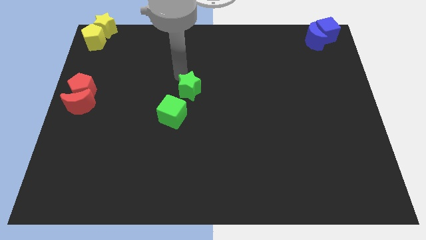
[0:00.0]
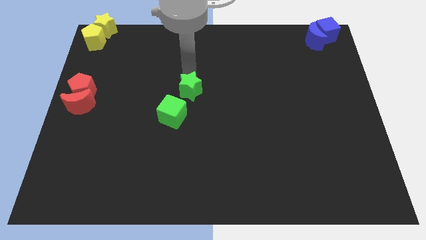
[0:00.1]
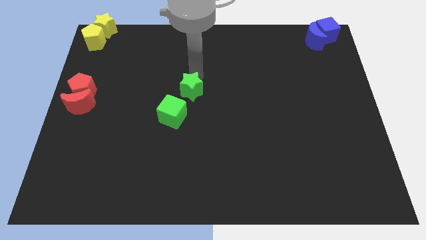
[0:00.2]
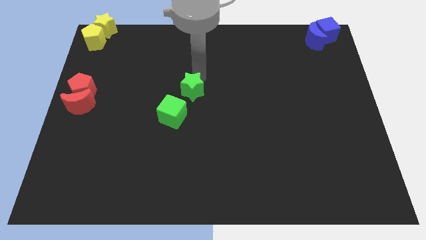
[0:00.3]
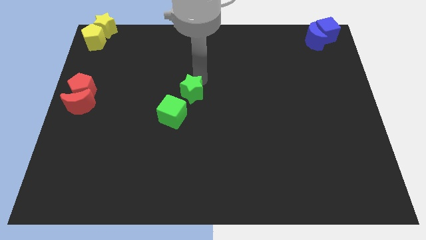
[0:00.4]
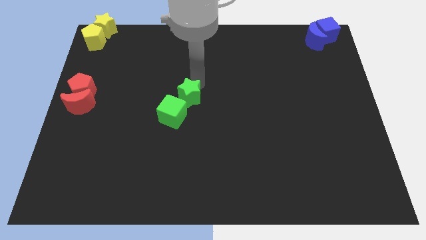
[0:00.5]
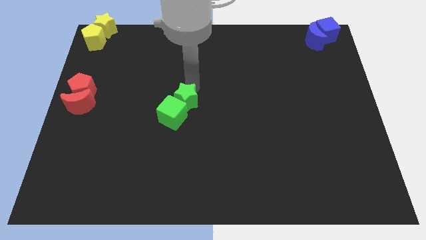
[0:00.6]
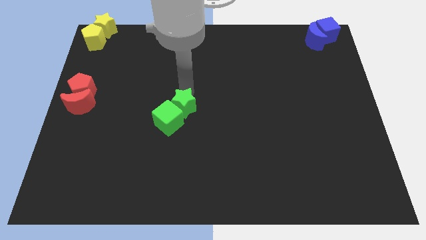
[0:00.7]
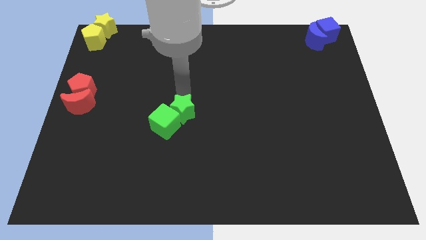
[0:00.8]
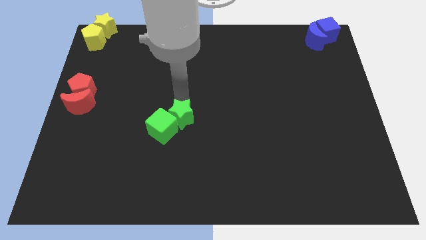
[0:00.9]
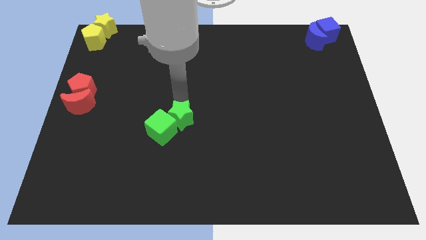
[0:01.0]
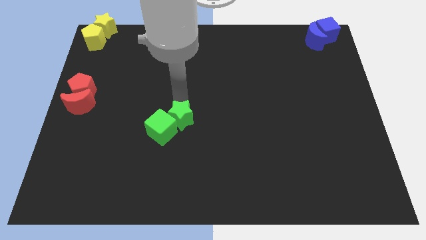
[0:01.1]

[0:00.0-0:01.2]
push the green star into the green cube

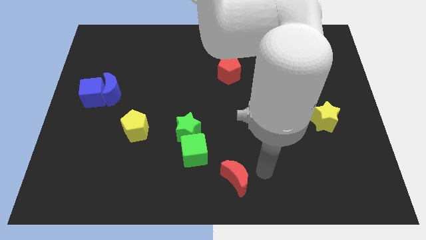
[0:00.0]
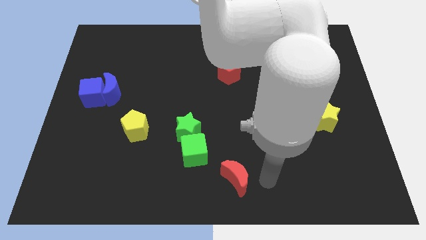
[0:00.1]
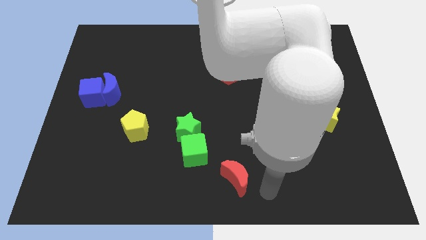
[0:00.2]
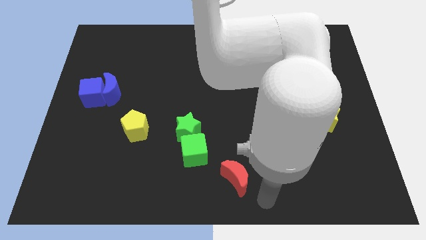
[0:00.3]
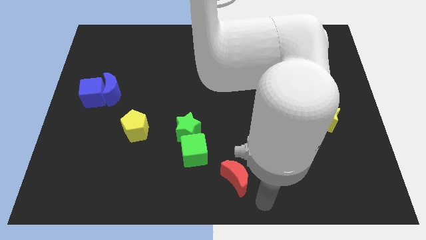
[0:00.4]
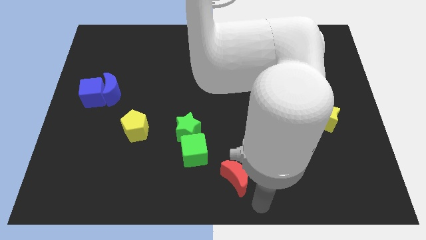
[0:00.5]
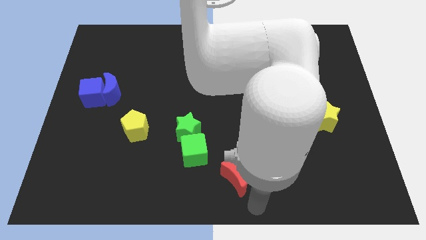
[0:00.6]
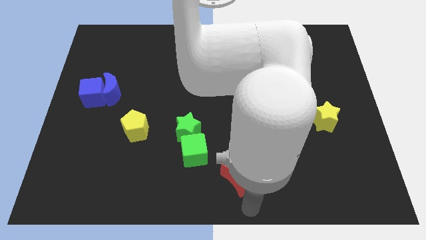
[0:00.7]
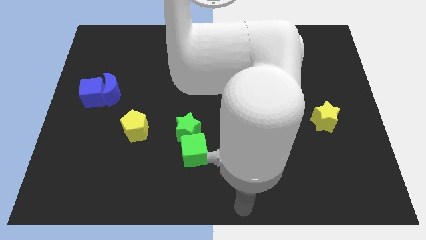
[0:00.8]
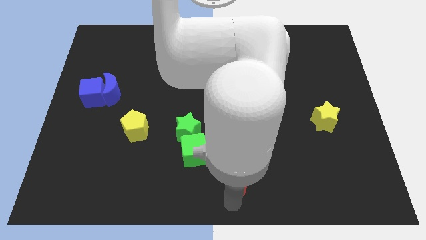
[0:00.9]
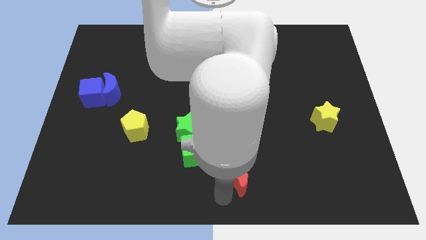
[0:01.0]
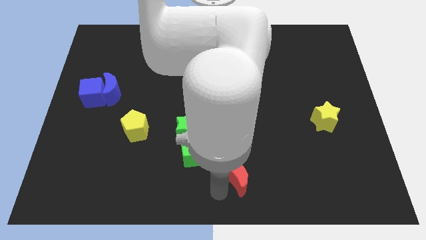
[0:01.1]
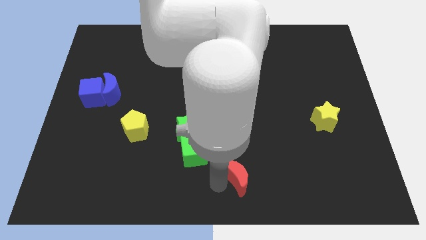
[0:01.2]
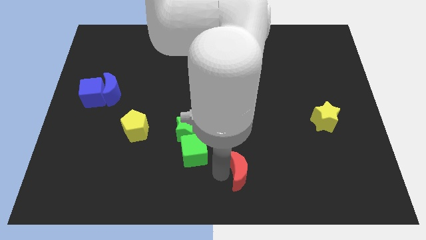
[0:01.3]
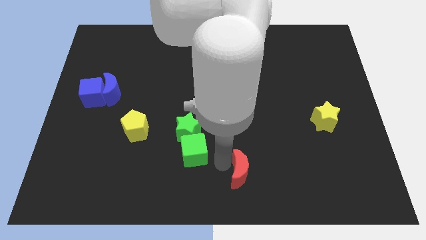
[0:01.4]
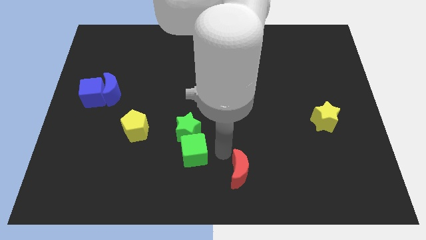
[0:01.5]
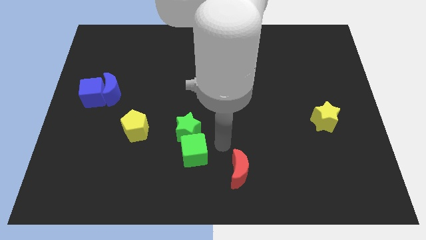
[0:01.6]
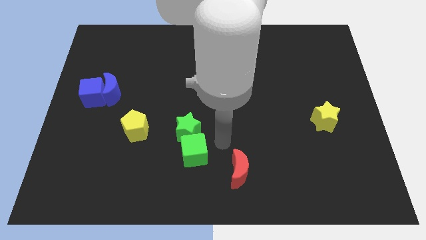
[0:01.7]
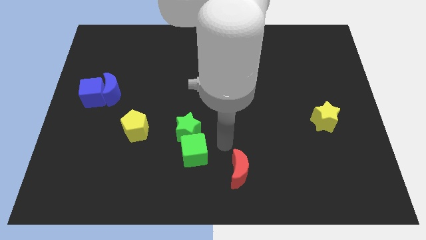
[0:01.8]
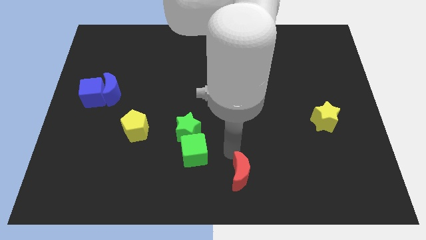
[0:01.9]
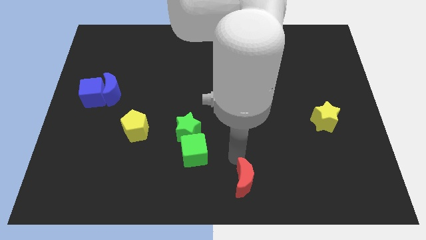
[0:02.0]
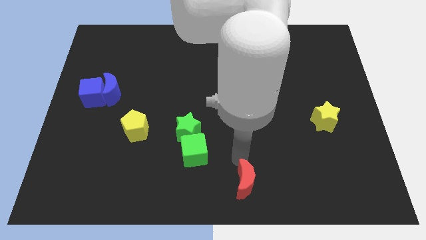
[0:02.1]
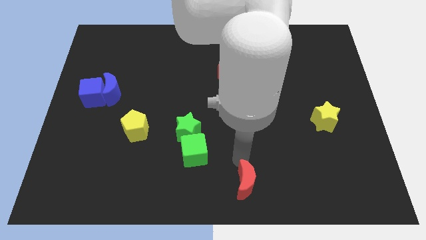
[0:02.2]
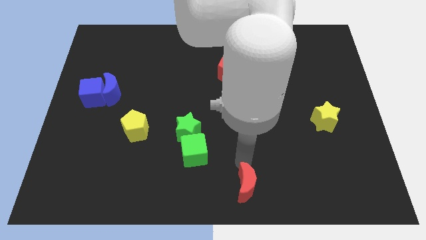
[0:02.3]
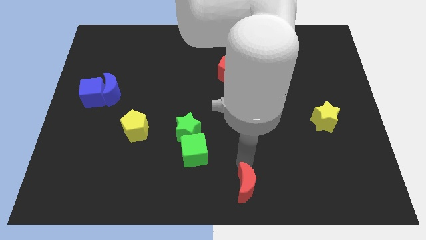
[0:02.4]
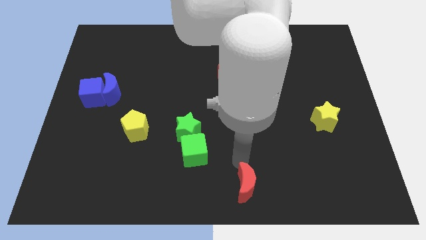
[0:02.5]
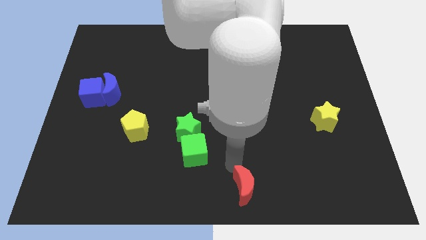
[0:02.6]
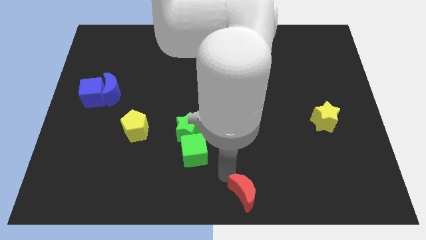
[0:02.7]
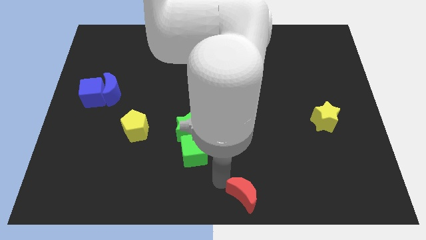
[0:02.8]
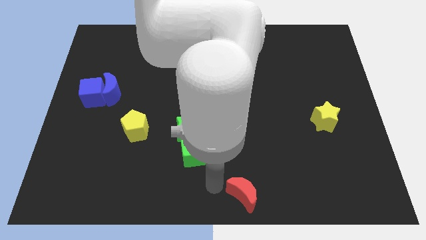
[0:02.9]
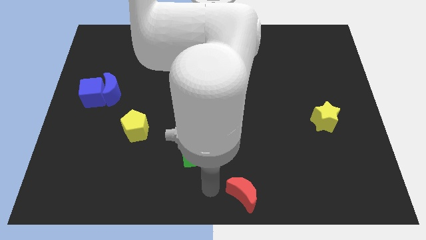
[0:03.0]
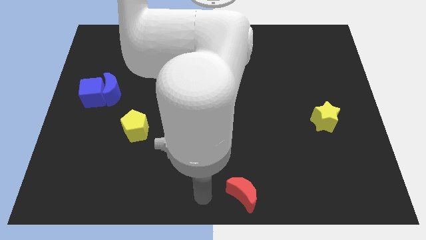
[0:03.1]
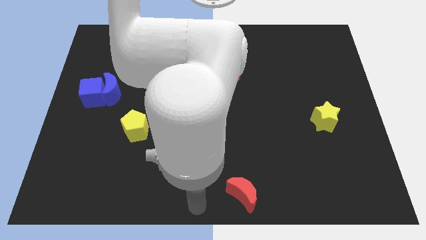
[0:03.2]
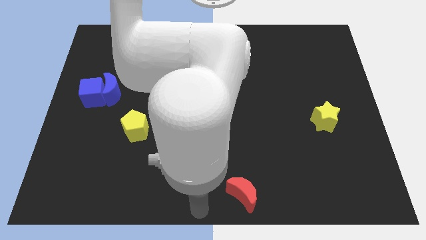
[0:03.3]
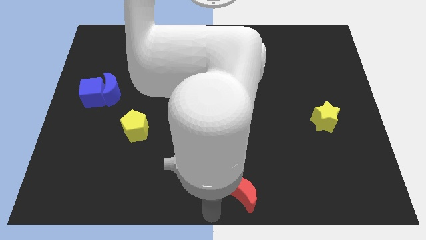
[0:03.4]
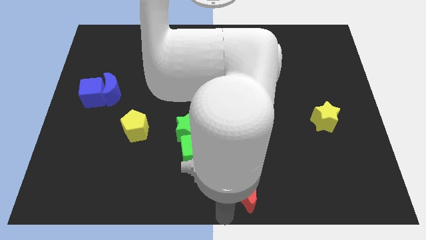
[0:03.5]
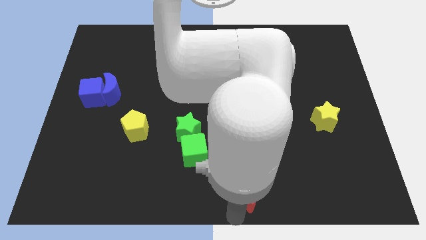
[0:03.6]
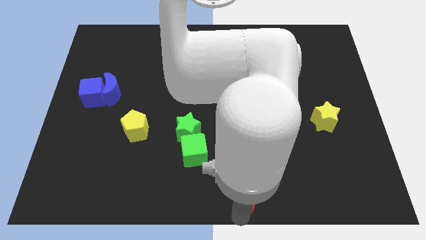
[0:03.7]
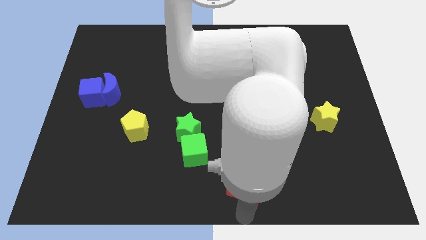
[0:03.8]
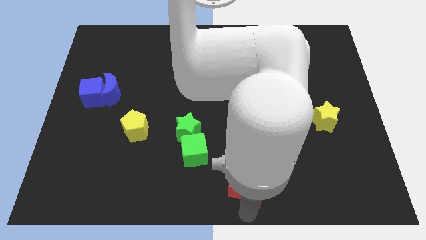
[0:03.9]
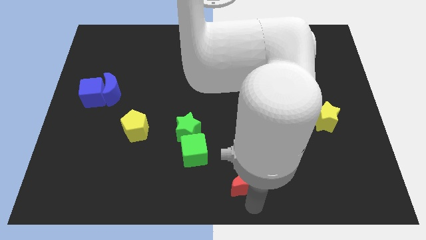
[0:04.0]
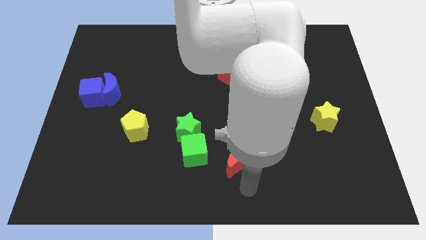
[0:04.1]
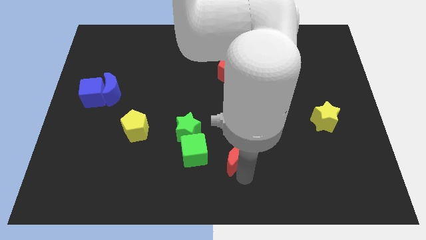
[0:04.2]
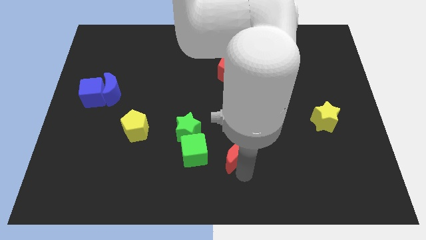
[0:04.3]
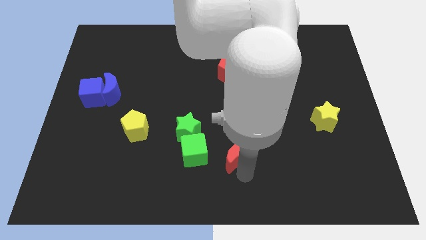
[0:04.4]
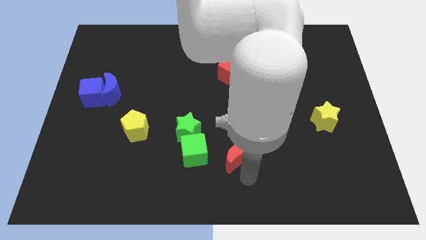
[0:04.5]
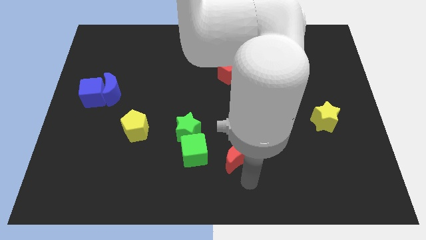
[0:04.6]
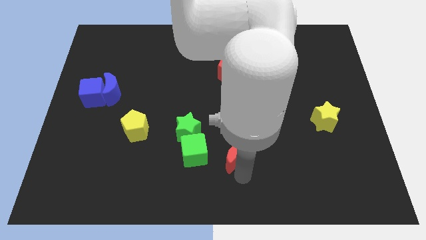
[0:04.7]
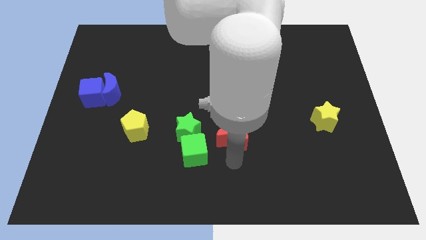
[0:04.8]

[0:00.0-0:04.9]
push the red moon to the right of the green cube

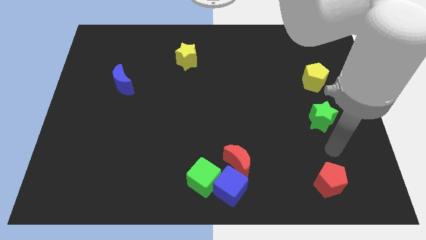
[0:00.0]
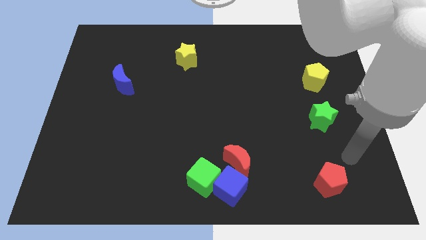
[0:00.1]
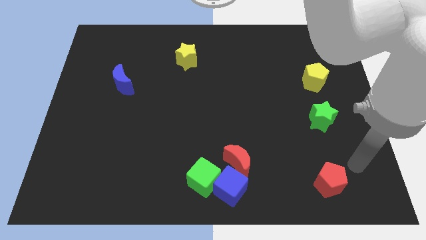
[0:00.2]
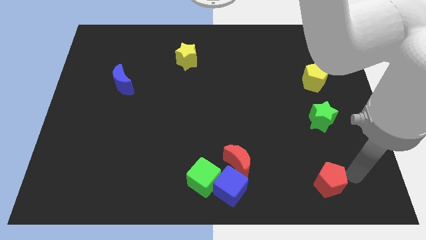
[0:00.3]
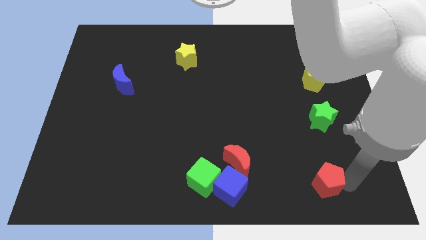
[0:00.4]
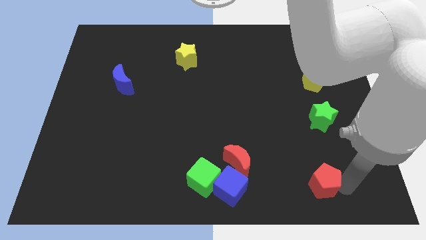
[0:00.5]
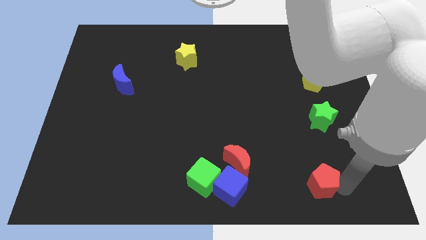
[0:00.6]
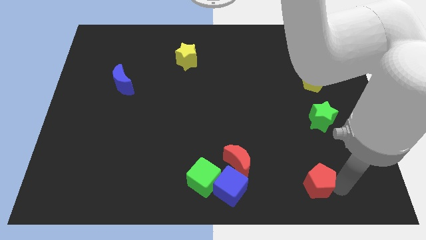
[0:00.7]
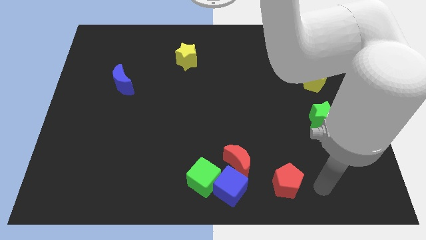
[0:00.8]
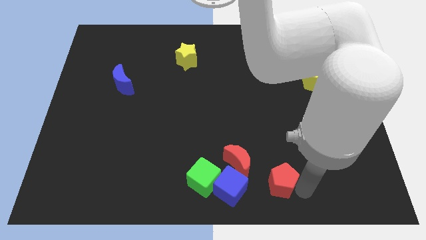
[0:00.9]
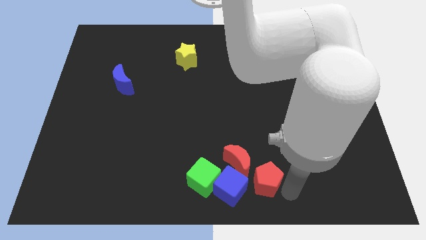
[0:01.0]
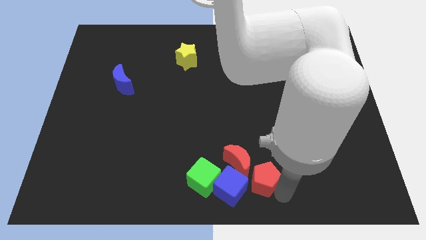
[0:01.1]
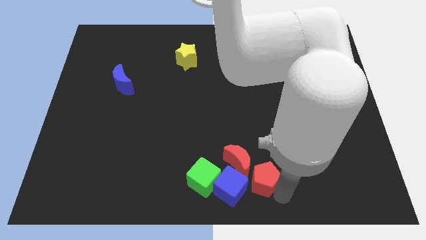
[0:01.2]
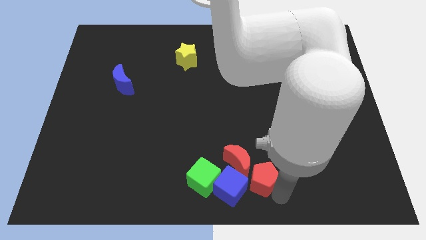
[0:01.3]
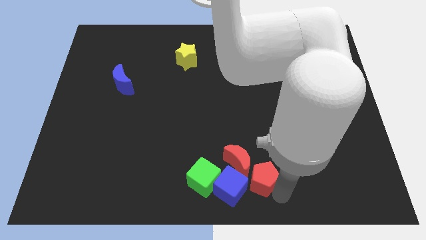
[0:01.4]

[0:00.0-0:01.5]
push the red pentagon to the left of the red moon

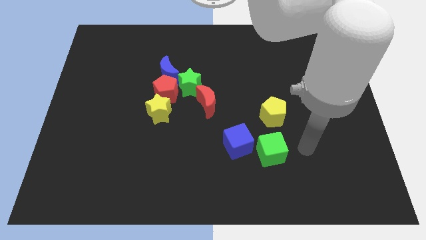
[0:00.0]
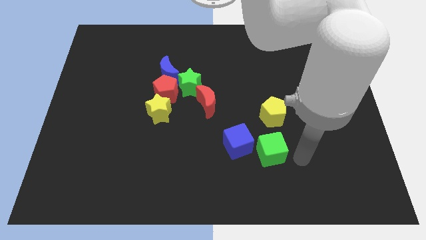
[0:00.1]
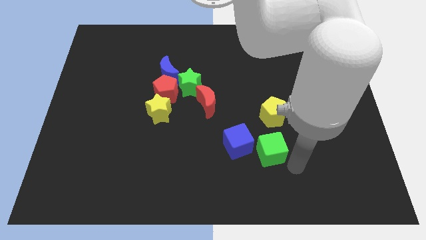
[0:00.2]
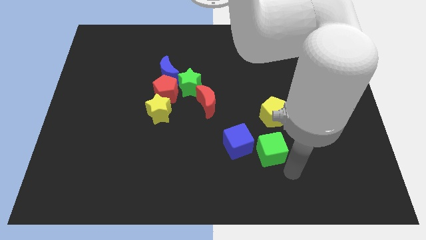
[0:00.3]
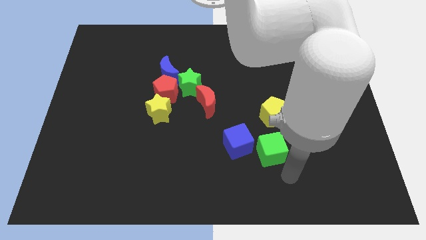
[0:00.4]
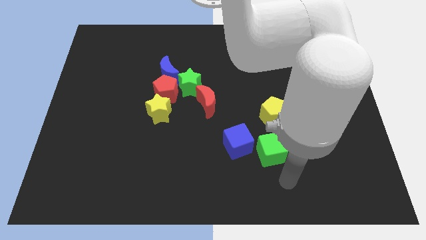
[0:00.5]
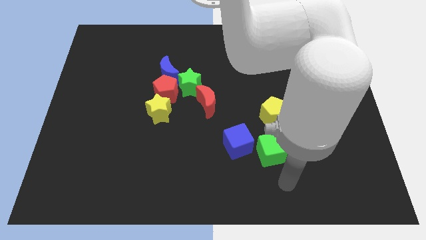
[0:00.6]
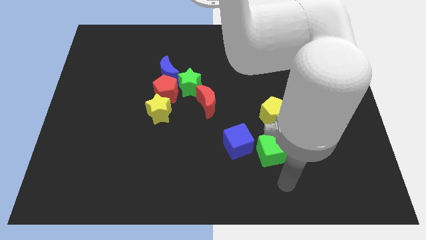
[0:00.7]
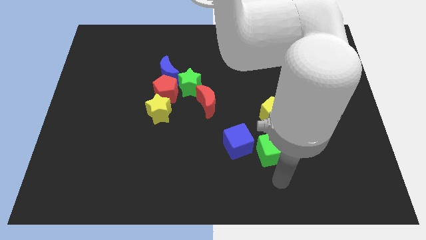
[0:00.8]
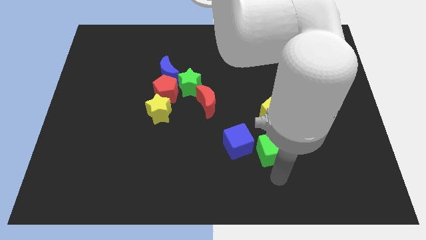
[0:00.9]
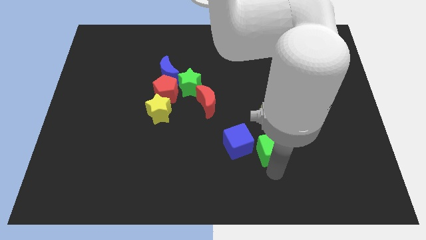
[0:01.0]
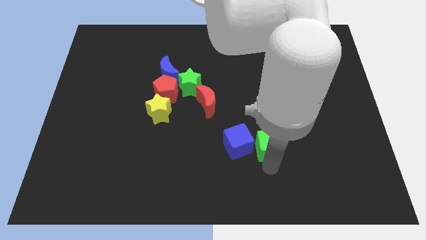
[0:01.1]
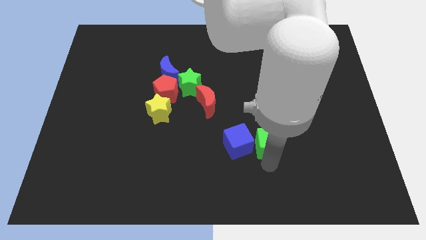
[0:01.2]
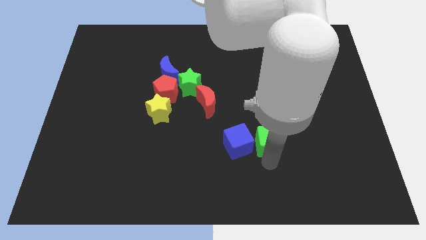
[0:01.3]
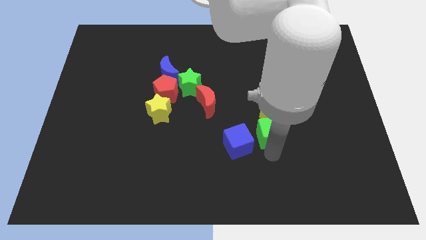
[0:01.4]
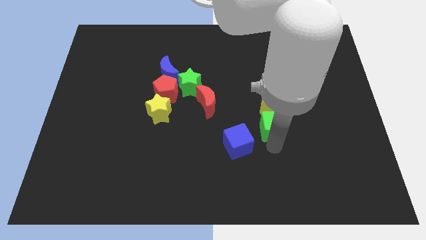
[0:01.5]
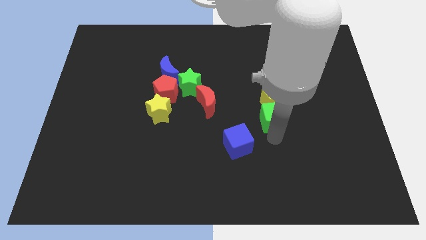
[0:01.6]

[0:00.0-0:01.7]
move green cube into the yellow pentagon
